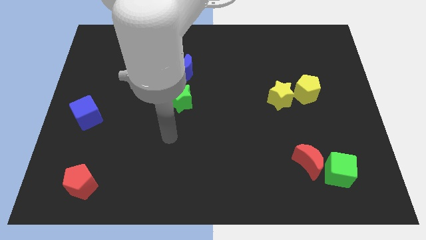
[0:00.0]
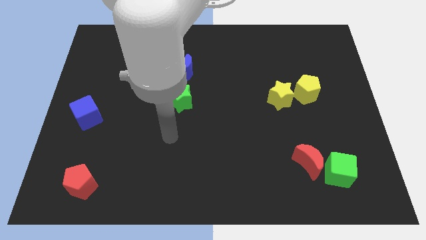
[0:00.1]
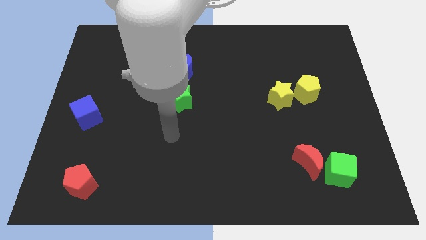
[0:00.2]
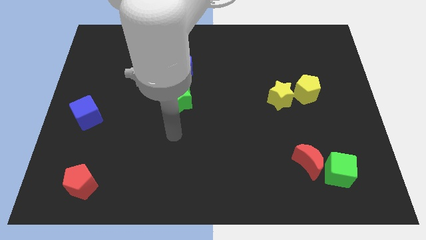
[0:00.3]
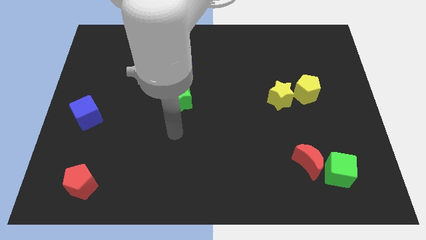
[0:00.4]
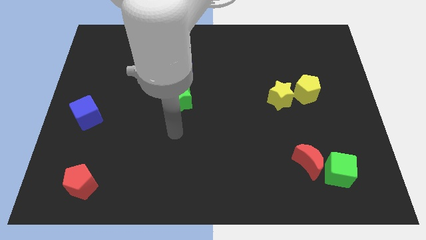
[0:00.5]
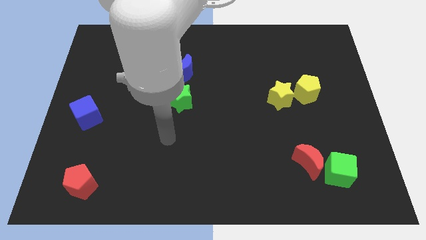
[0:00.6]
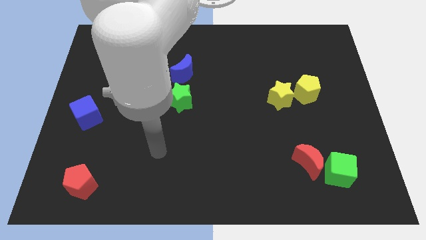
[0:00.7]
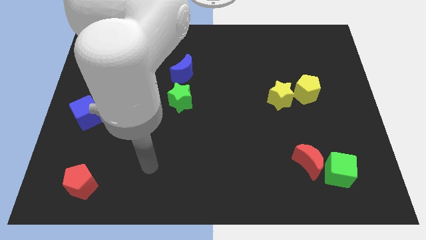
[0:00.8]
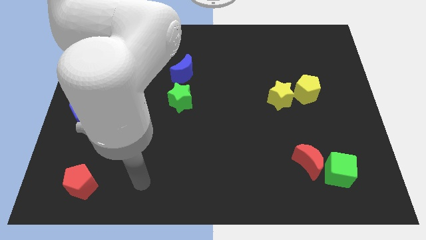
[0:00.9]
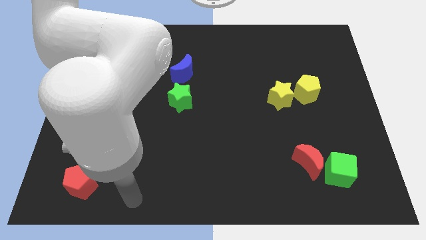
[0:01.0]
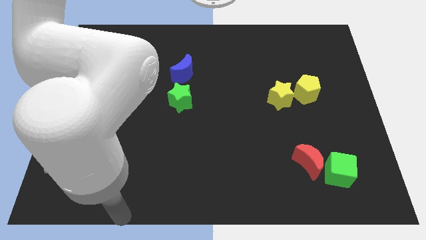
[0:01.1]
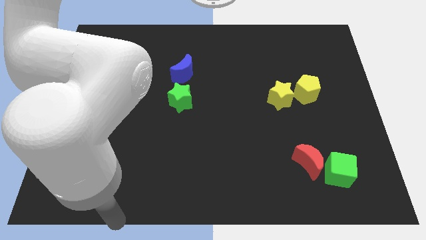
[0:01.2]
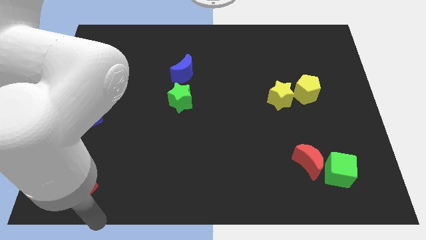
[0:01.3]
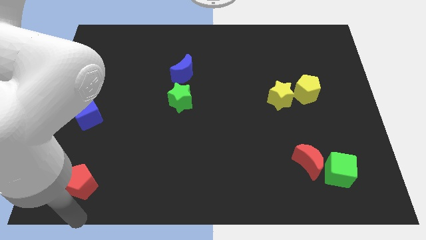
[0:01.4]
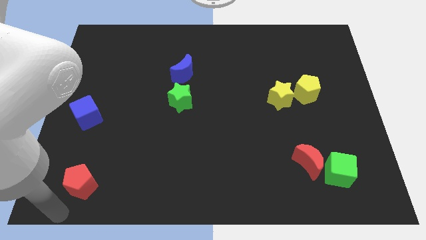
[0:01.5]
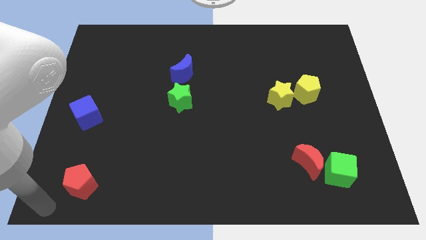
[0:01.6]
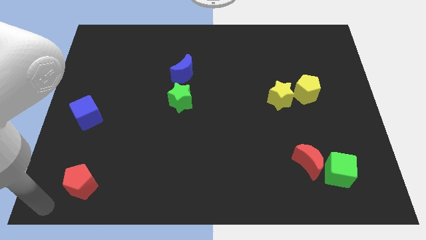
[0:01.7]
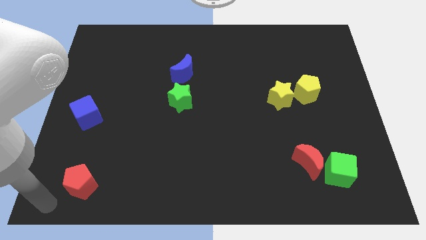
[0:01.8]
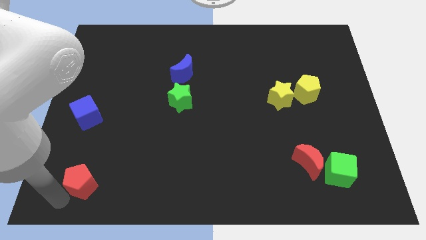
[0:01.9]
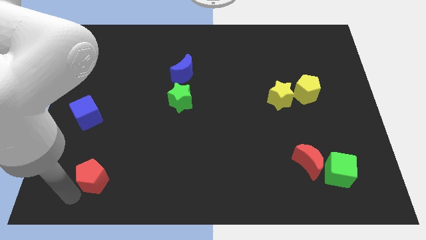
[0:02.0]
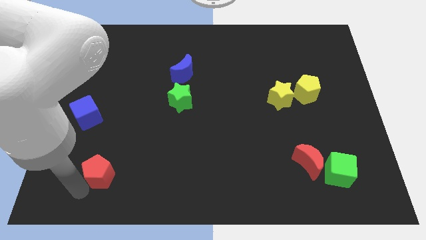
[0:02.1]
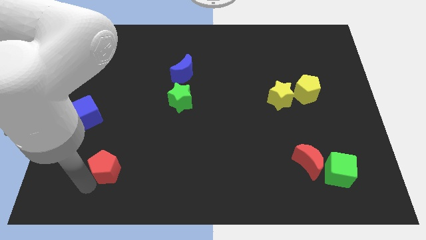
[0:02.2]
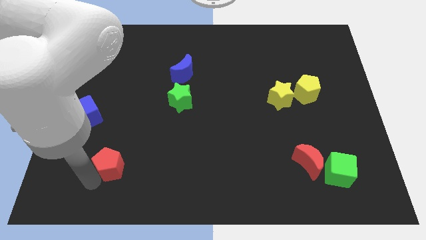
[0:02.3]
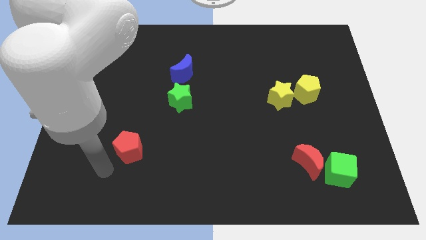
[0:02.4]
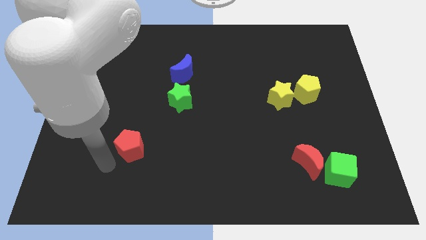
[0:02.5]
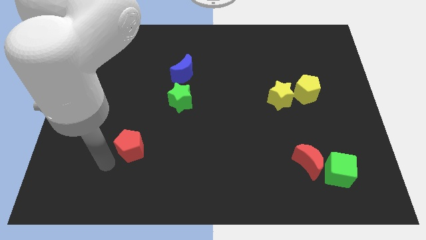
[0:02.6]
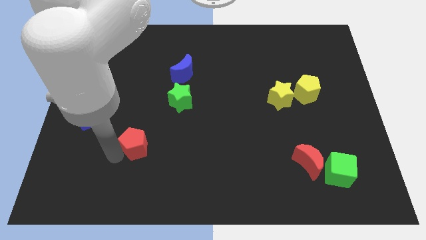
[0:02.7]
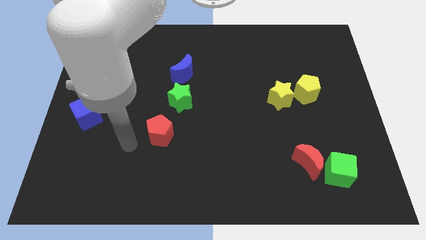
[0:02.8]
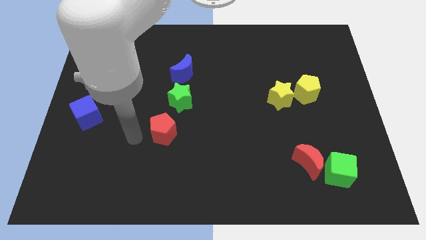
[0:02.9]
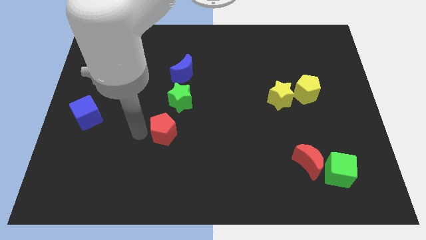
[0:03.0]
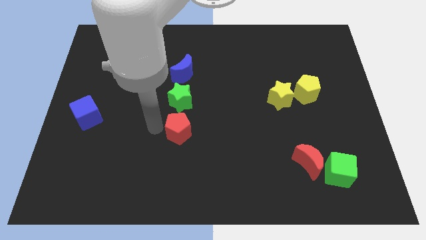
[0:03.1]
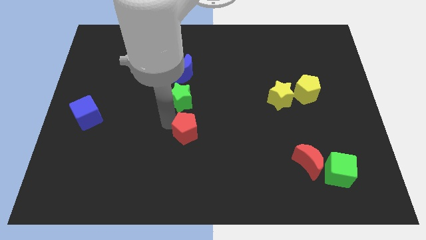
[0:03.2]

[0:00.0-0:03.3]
place the red pentagon below the green star

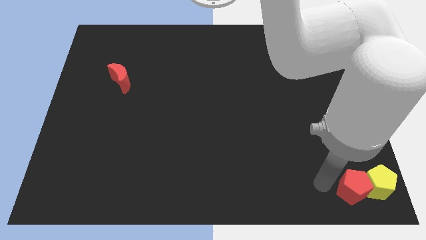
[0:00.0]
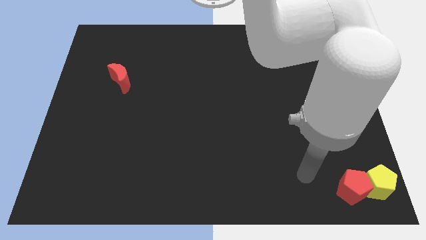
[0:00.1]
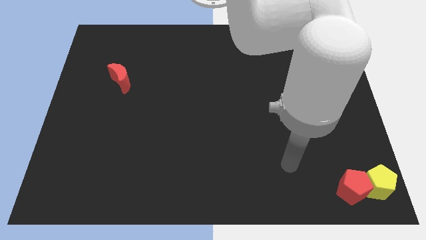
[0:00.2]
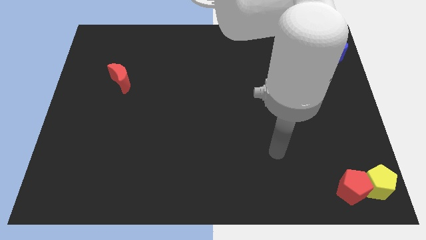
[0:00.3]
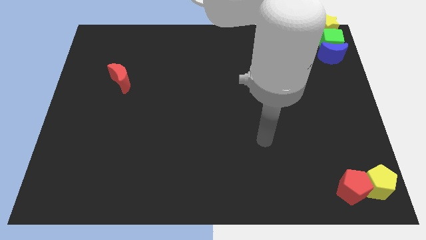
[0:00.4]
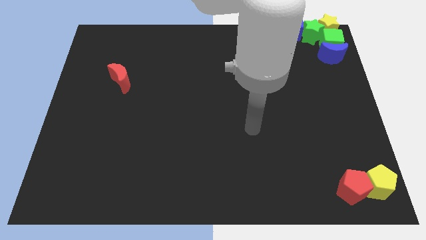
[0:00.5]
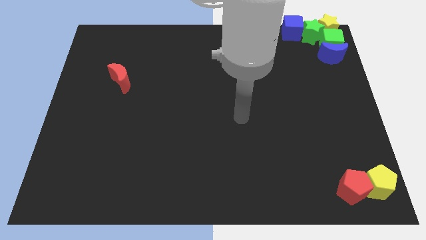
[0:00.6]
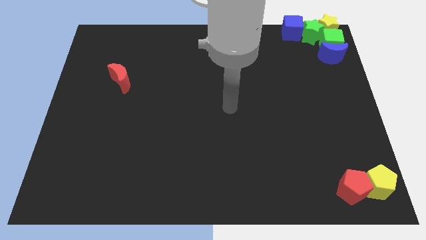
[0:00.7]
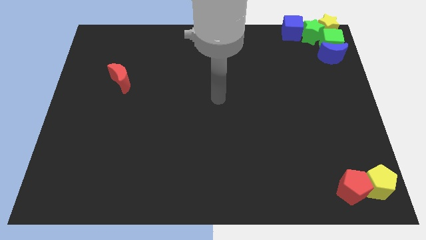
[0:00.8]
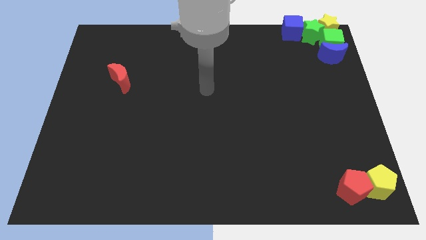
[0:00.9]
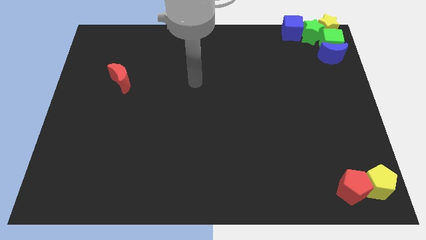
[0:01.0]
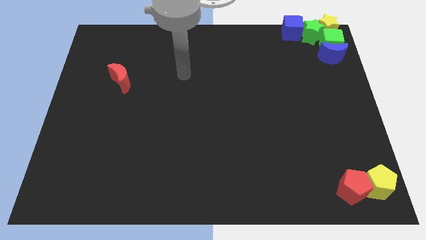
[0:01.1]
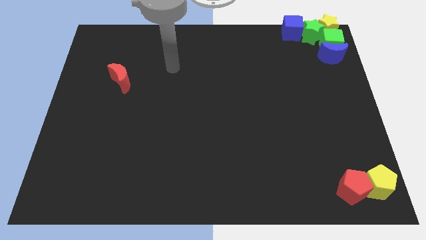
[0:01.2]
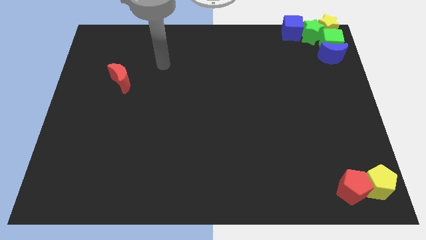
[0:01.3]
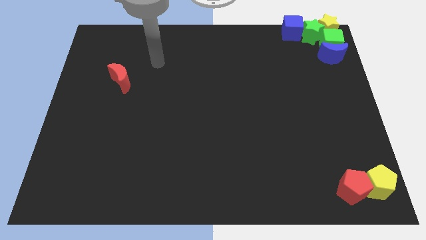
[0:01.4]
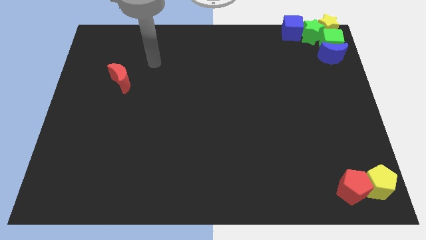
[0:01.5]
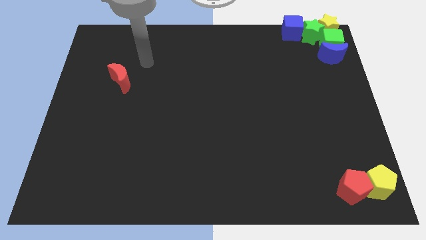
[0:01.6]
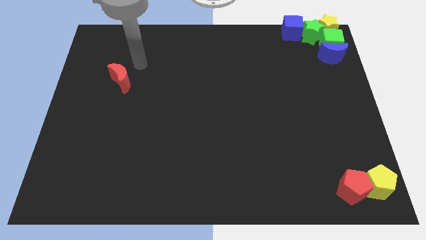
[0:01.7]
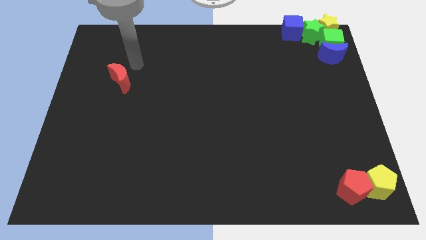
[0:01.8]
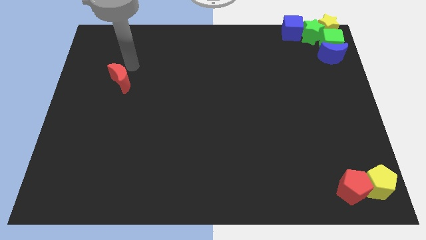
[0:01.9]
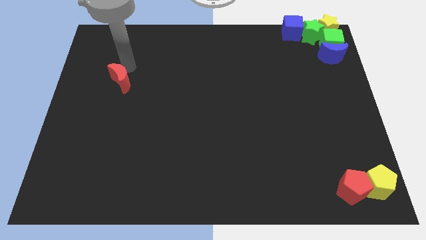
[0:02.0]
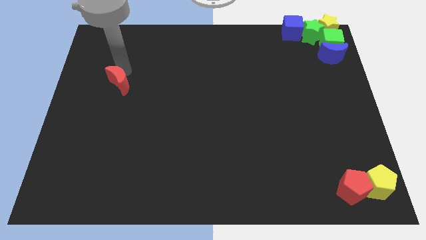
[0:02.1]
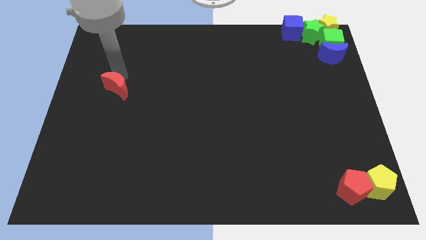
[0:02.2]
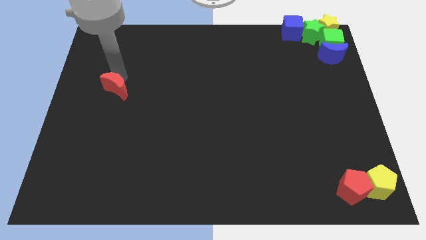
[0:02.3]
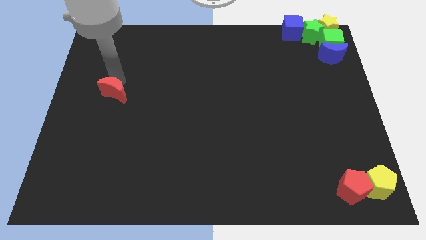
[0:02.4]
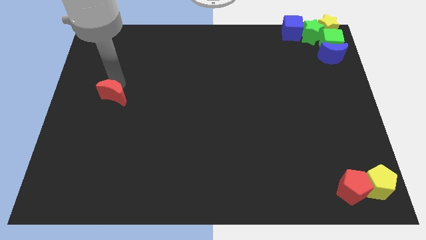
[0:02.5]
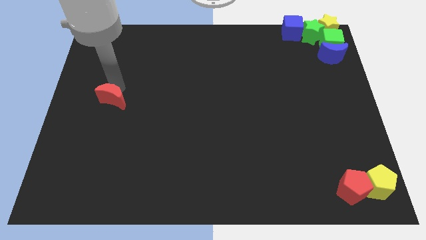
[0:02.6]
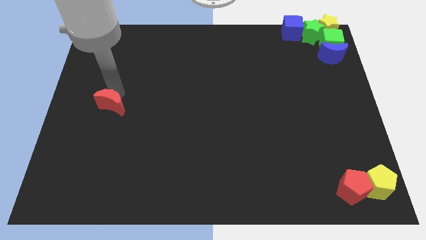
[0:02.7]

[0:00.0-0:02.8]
push the red crescent slightly to the bottom

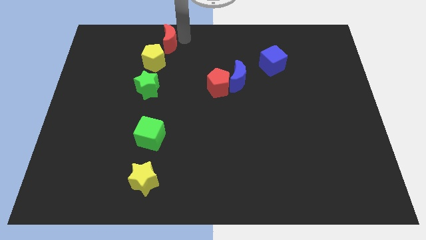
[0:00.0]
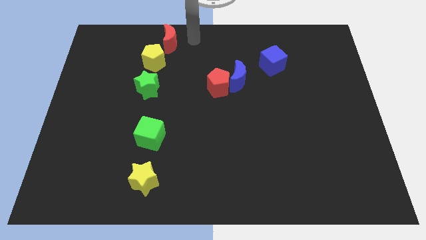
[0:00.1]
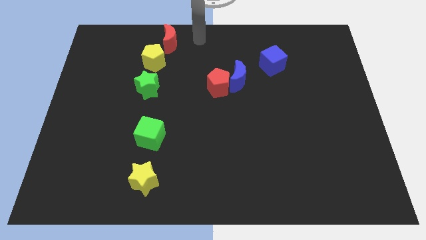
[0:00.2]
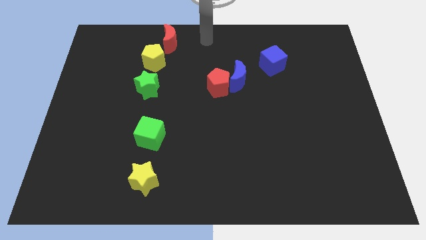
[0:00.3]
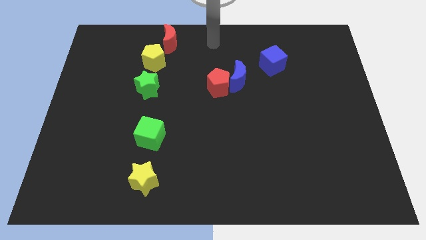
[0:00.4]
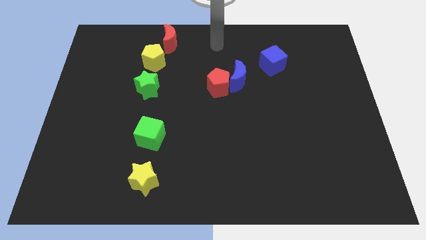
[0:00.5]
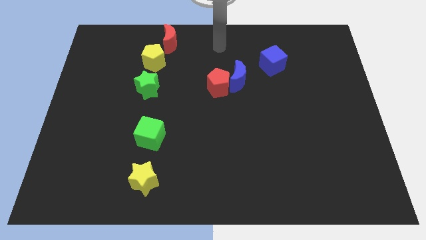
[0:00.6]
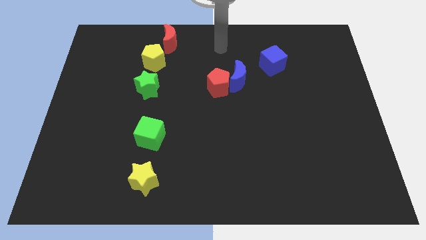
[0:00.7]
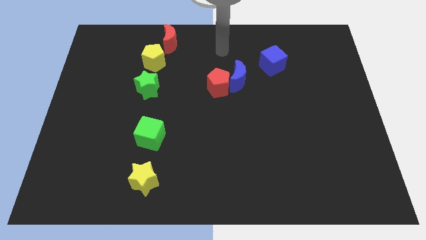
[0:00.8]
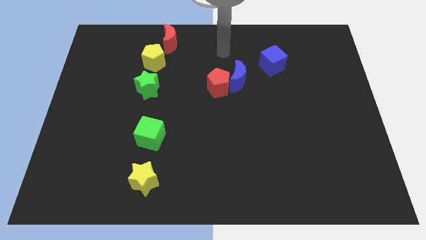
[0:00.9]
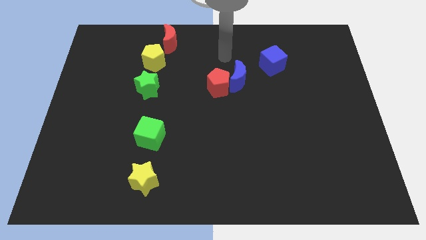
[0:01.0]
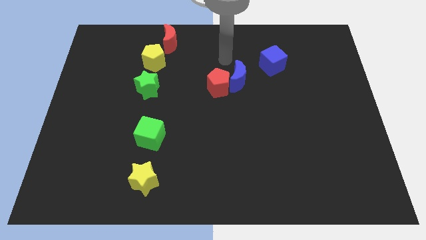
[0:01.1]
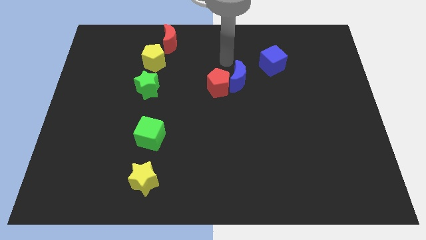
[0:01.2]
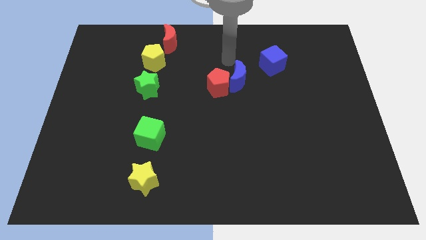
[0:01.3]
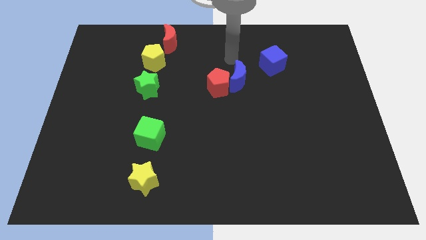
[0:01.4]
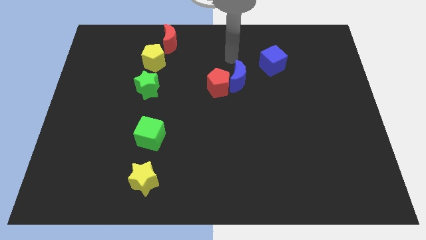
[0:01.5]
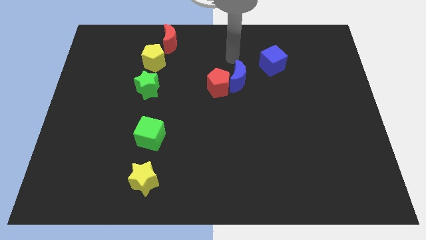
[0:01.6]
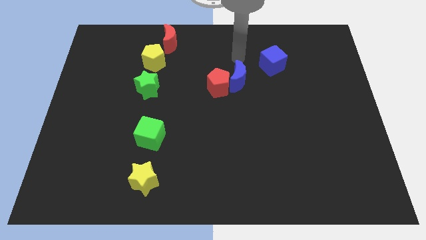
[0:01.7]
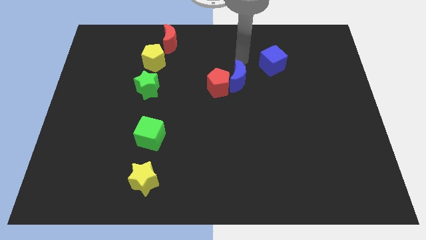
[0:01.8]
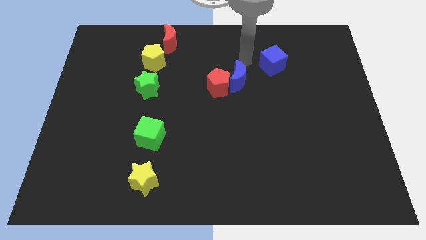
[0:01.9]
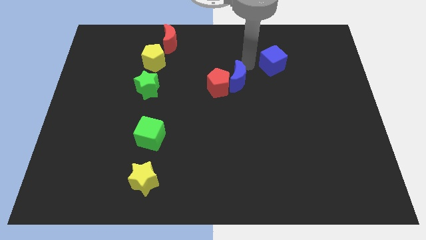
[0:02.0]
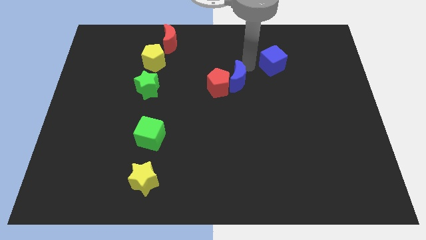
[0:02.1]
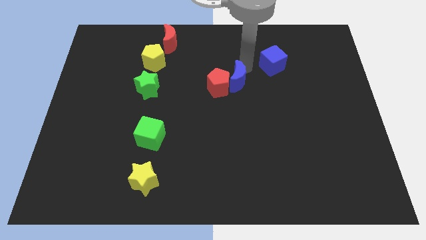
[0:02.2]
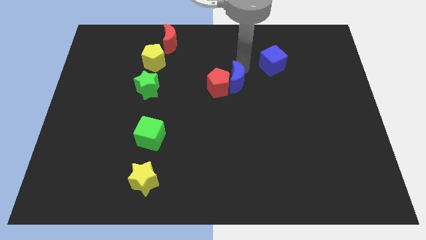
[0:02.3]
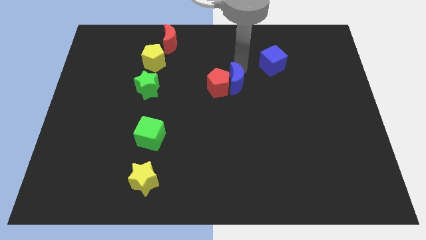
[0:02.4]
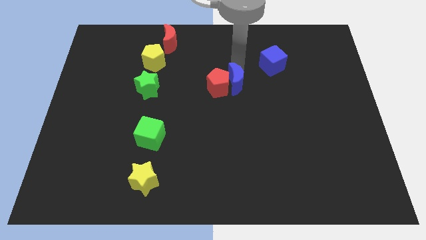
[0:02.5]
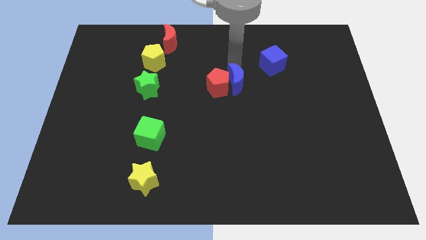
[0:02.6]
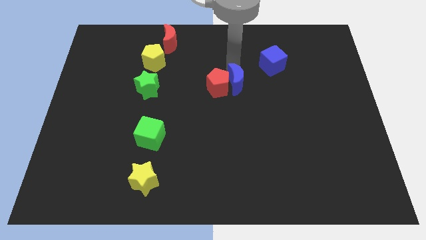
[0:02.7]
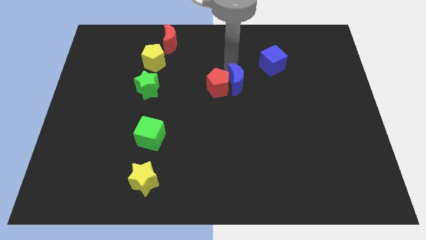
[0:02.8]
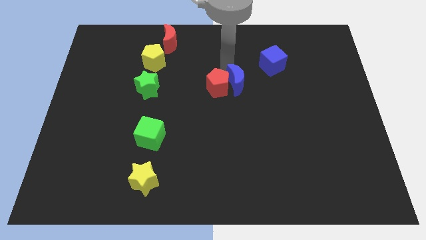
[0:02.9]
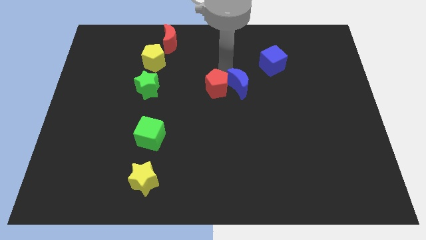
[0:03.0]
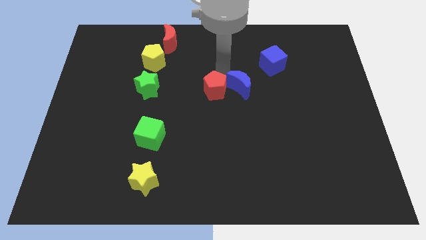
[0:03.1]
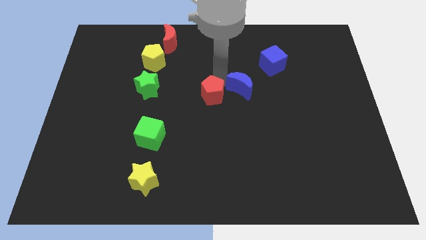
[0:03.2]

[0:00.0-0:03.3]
push the blue crescent into the red pentagon
